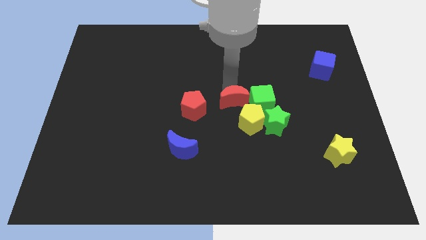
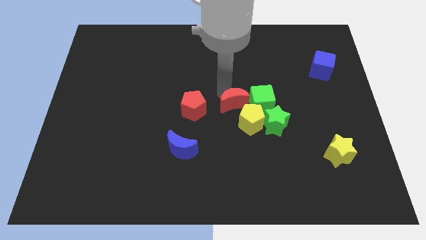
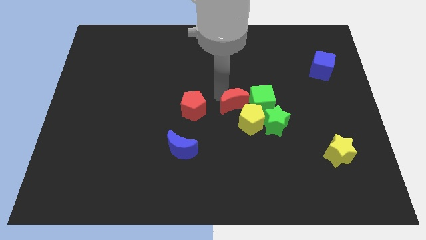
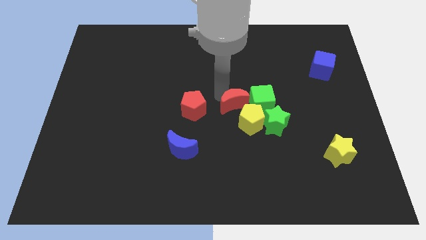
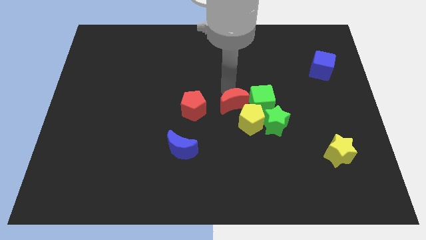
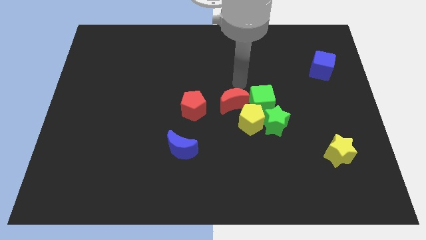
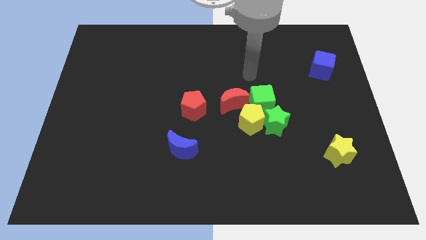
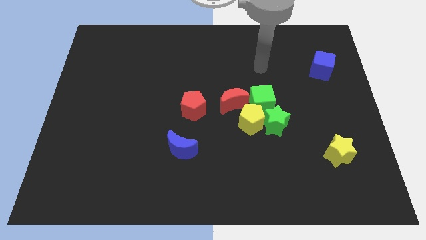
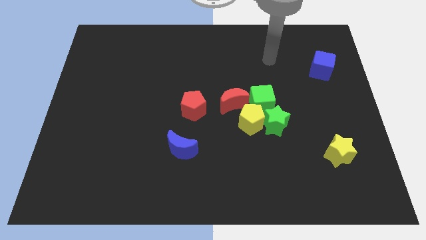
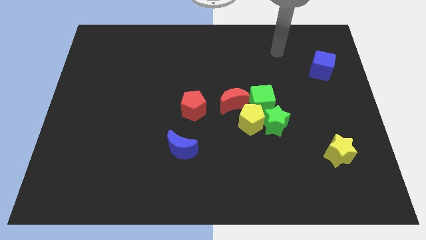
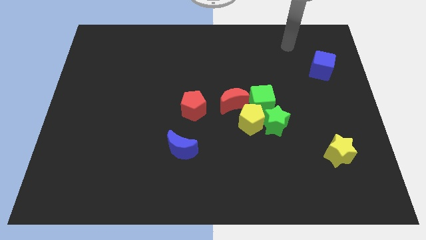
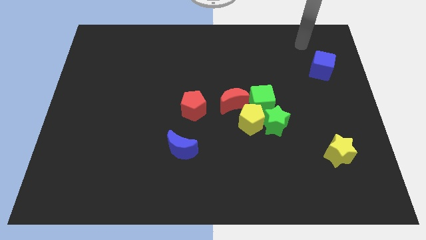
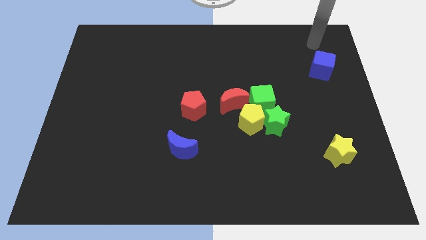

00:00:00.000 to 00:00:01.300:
tap red moon

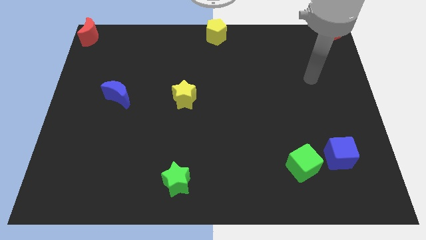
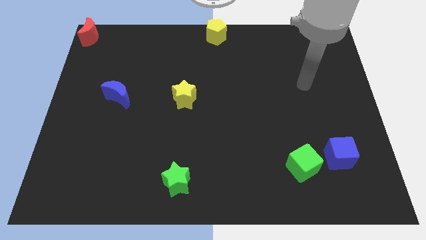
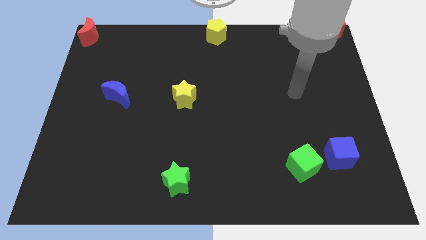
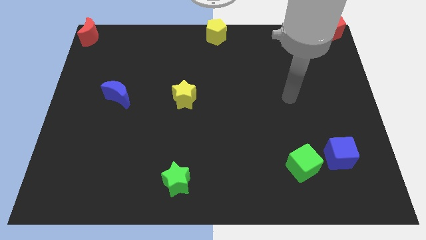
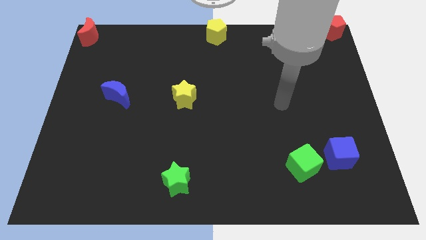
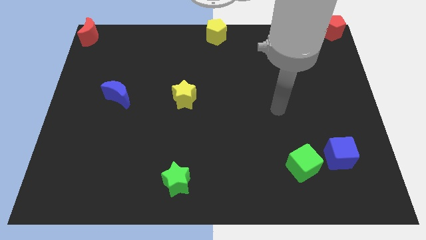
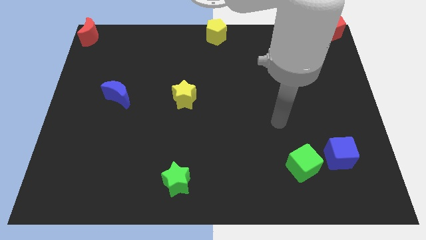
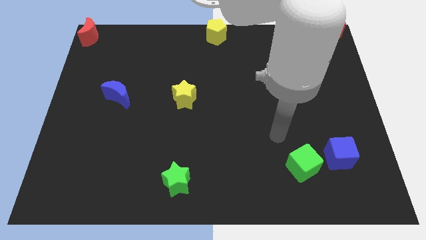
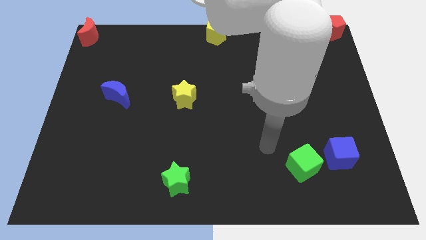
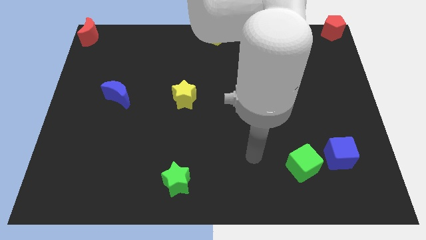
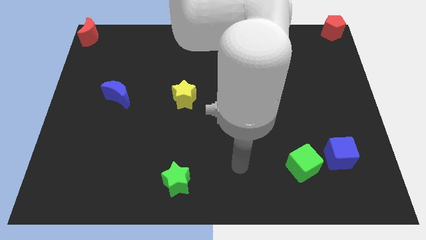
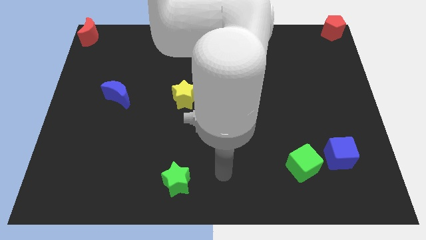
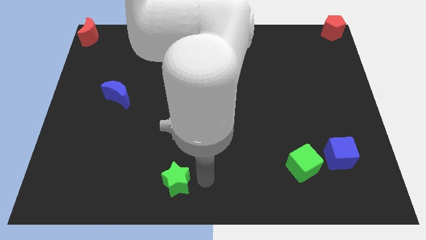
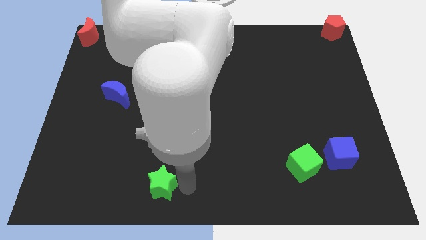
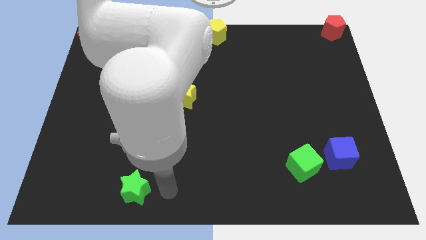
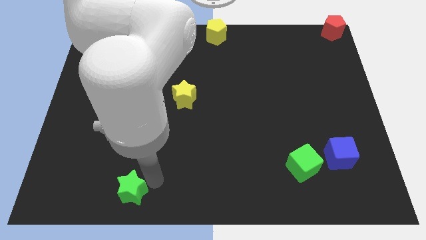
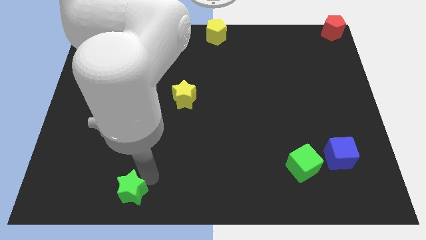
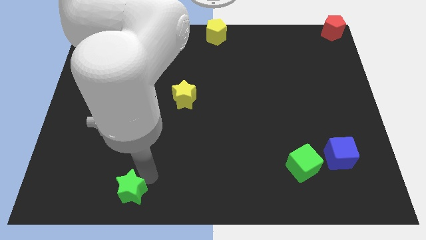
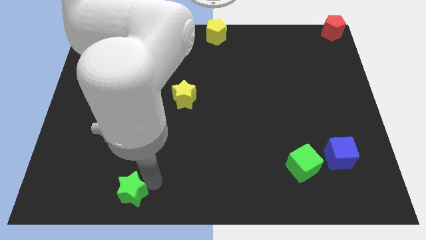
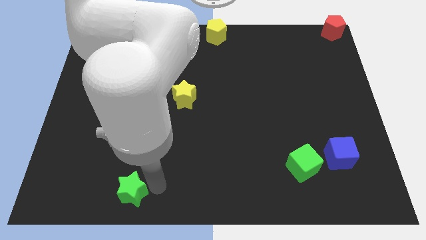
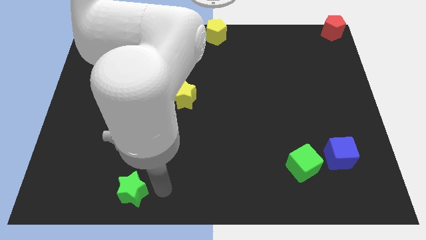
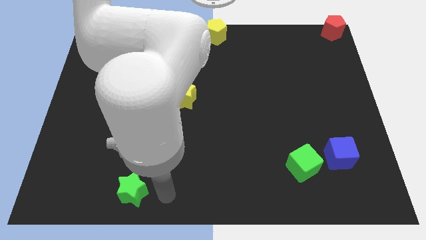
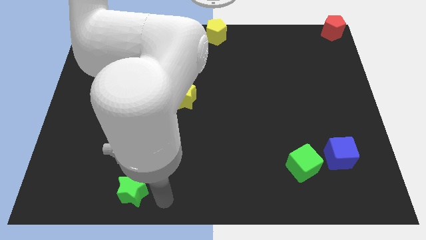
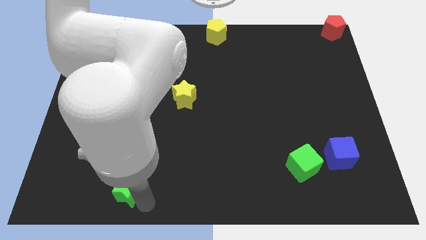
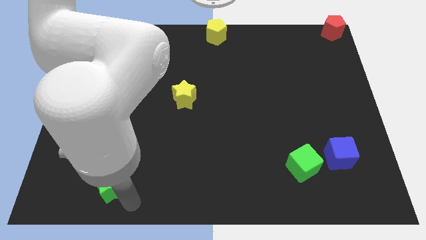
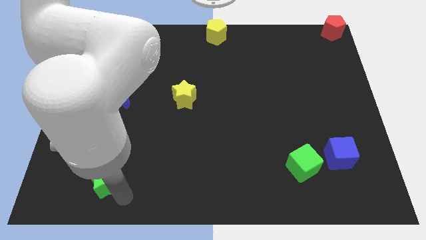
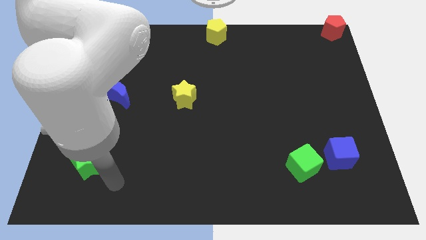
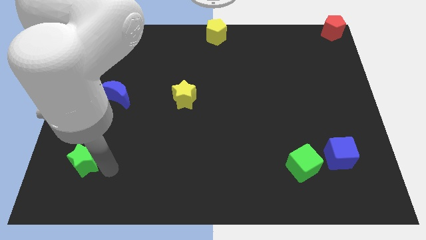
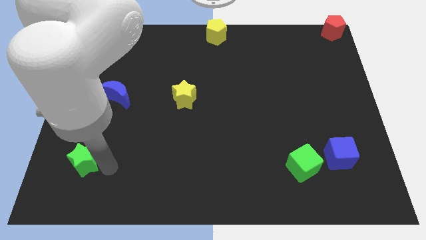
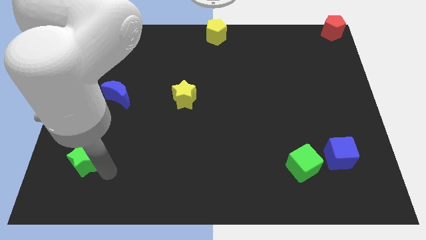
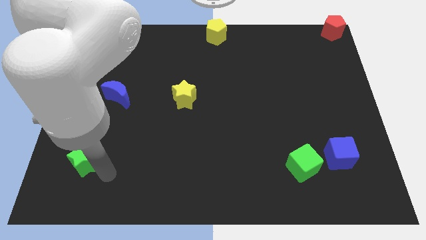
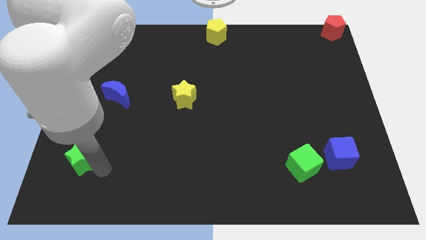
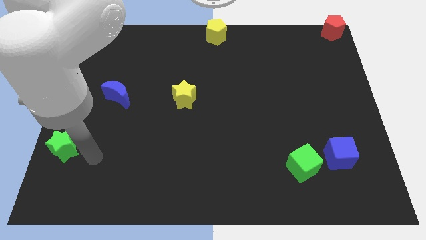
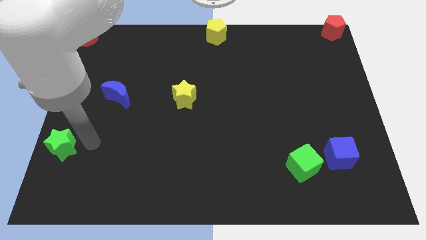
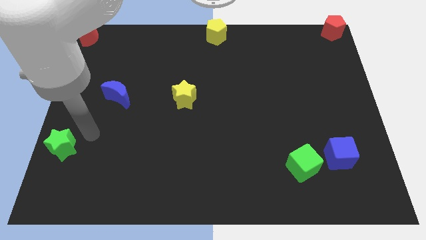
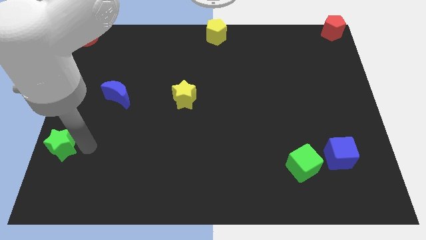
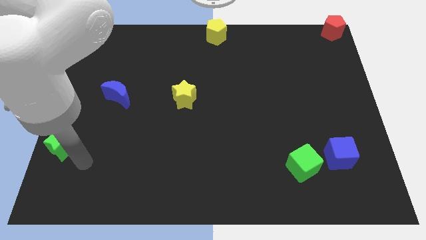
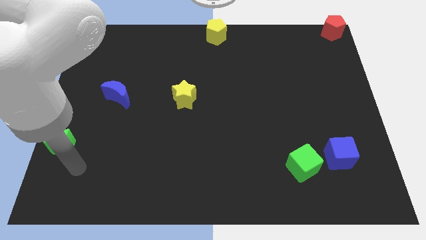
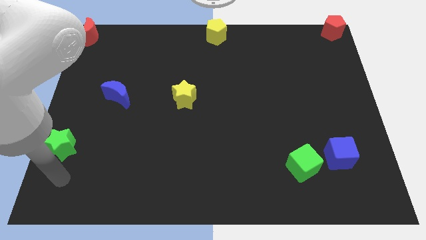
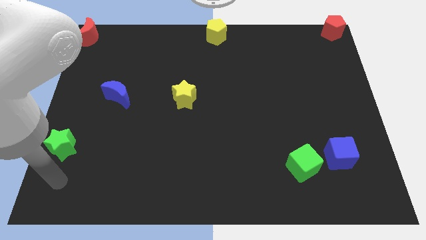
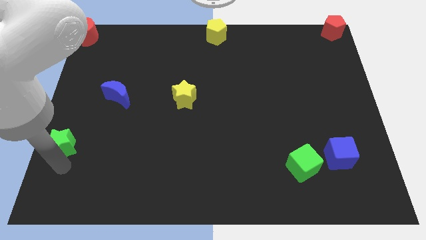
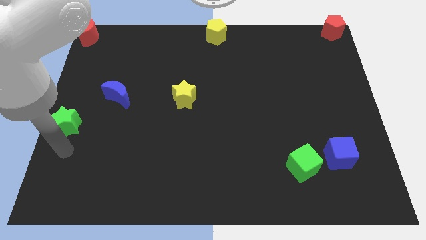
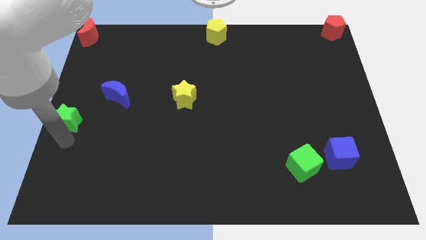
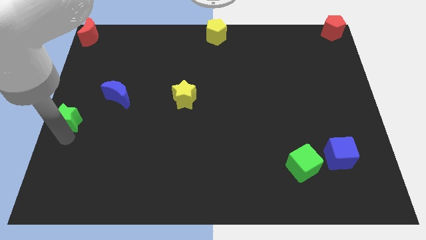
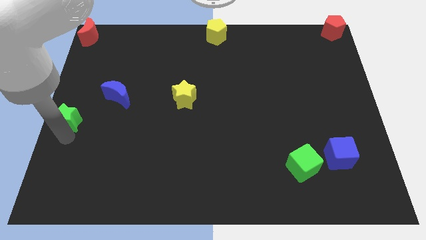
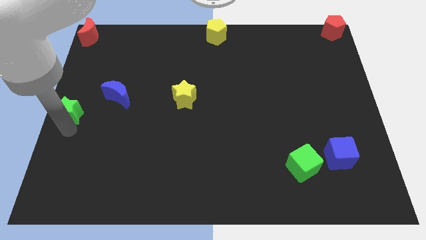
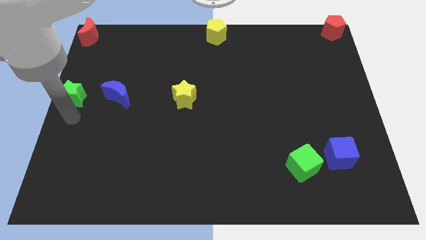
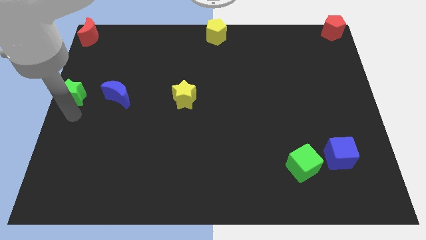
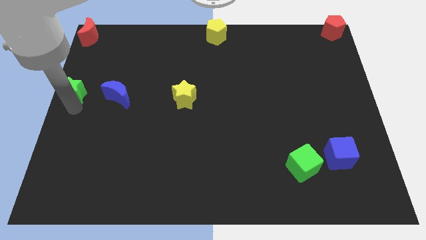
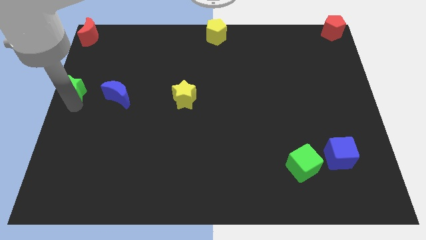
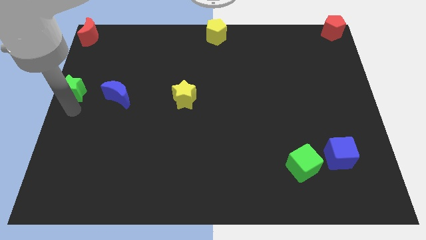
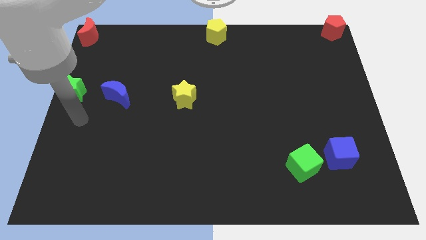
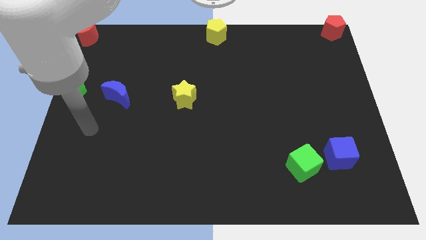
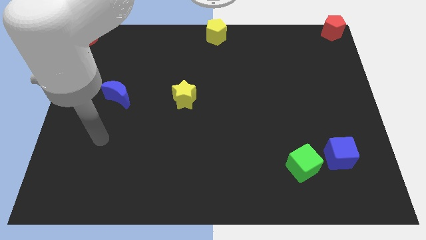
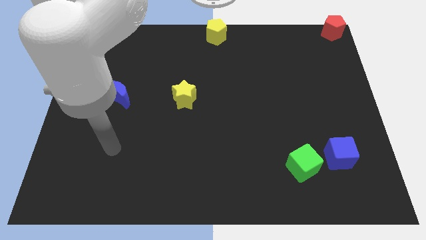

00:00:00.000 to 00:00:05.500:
push the green star towards the center left of the board

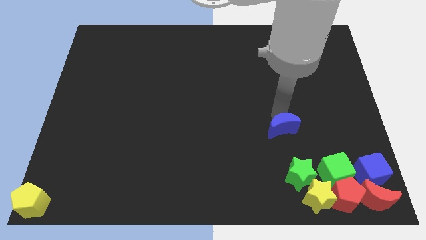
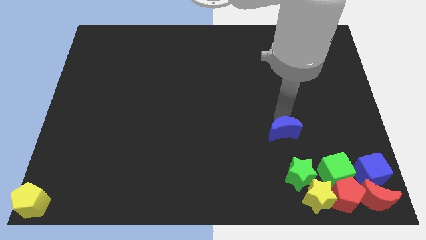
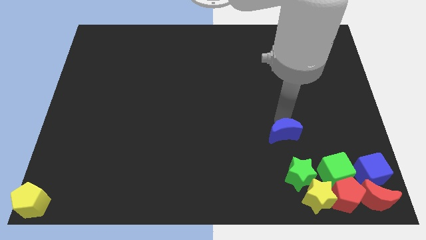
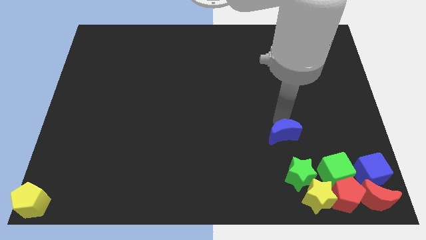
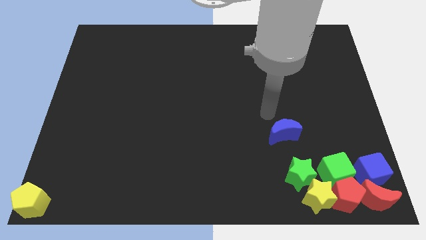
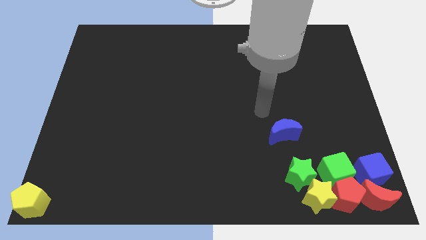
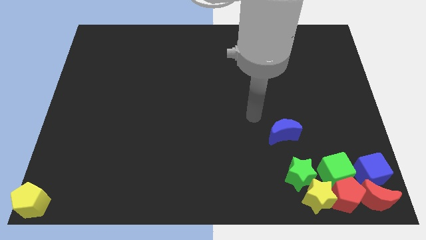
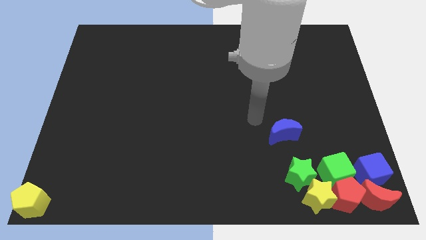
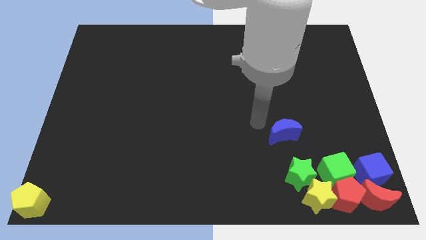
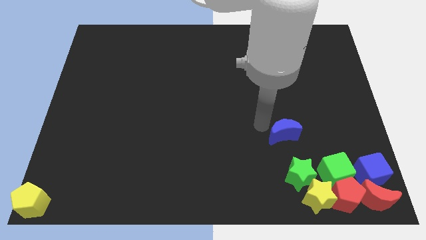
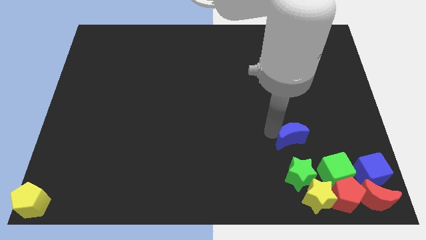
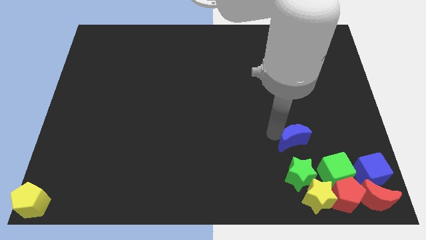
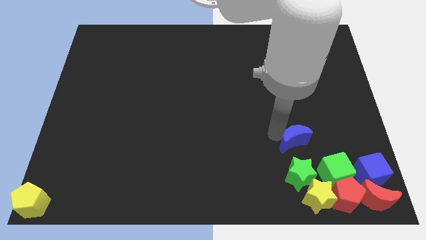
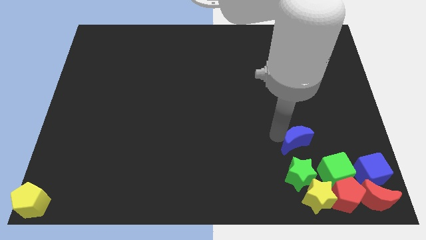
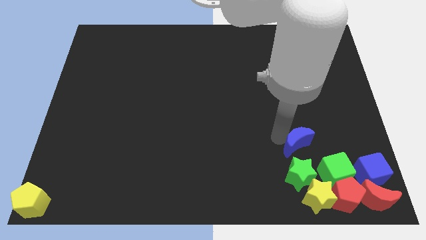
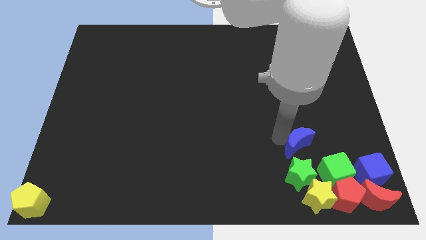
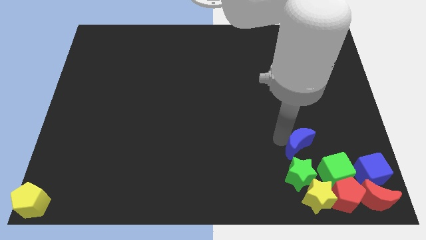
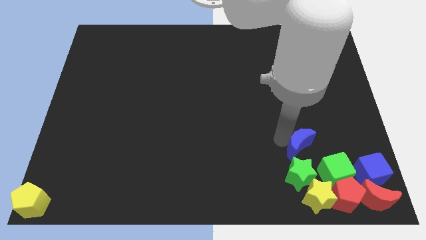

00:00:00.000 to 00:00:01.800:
move the blue crescent parallel to the green star

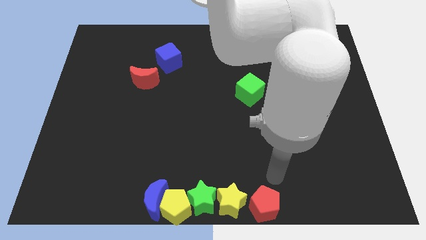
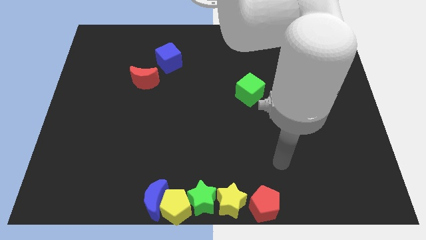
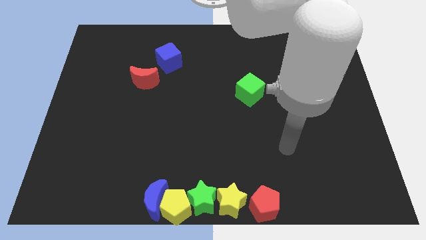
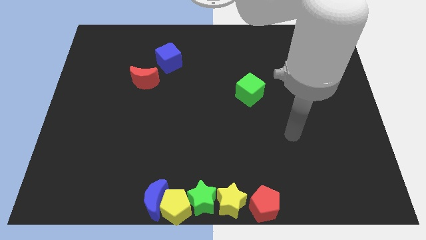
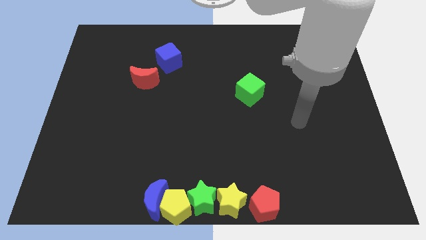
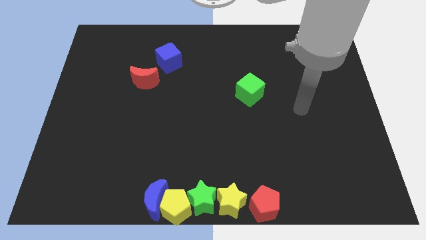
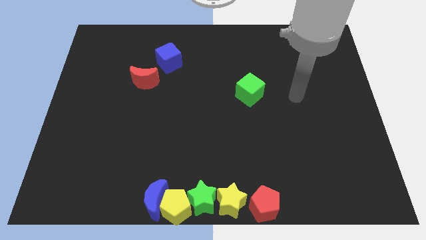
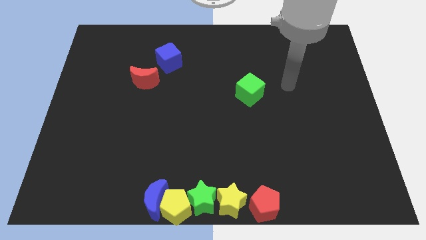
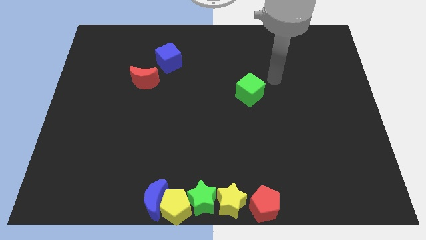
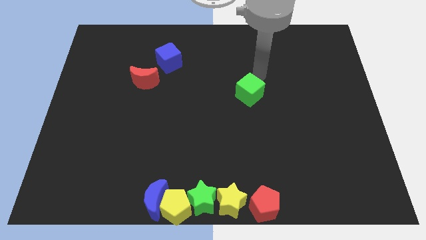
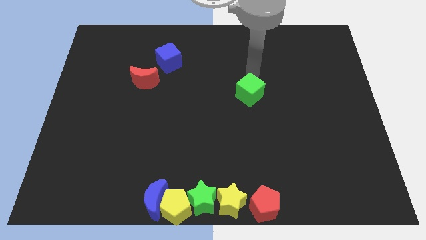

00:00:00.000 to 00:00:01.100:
point the arm above the green cube
